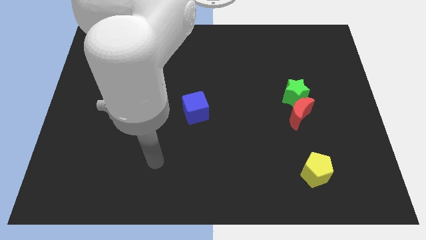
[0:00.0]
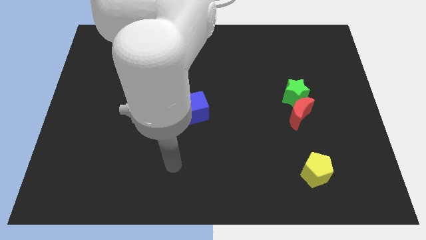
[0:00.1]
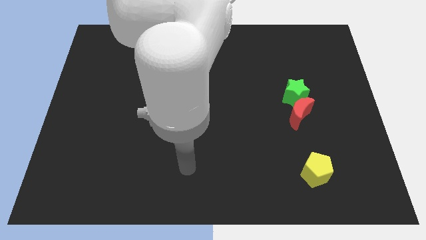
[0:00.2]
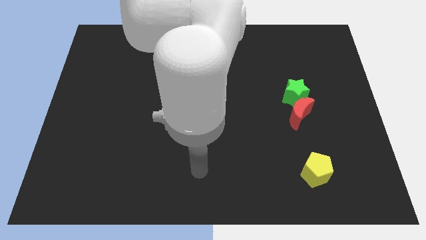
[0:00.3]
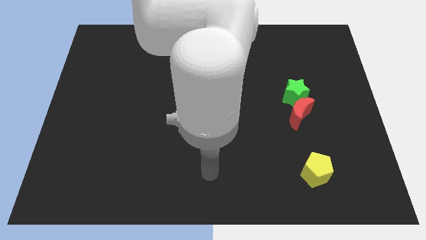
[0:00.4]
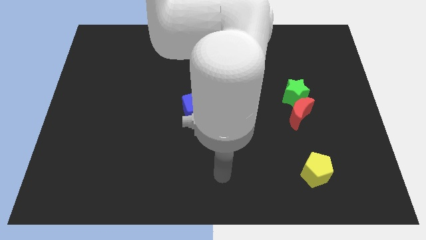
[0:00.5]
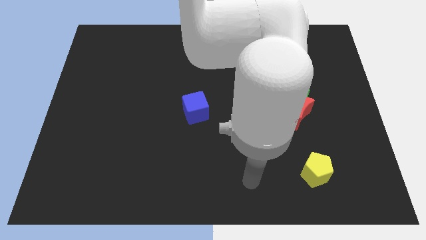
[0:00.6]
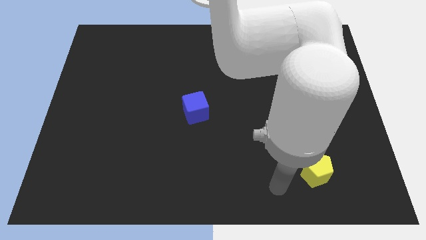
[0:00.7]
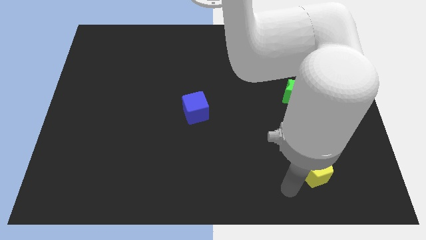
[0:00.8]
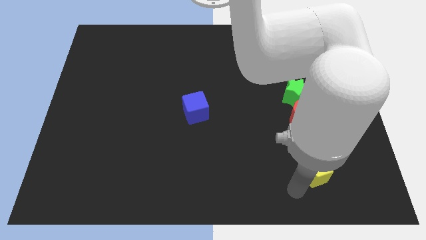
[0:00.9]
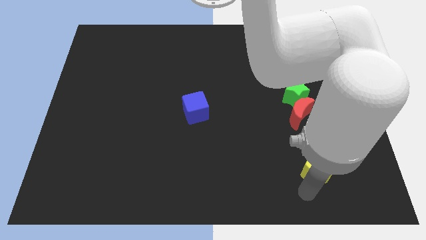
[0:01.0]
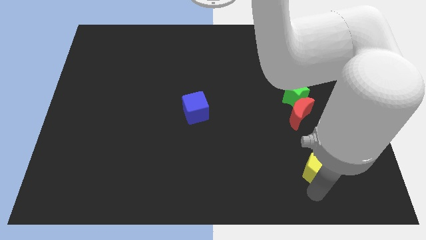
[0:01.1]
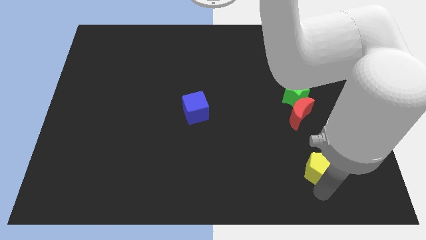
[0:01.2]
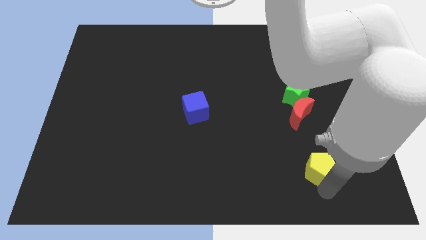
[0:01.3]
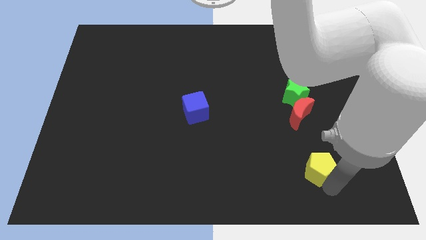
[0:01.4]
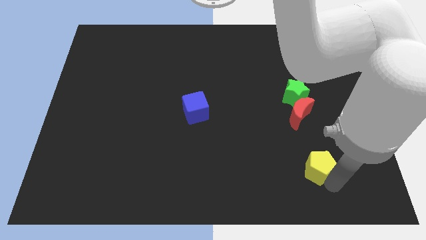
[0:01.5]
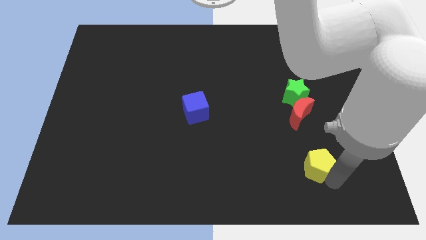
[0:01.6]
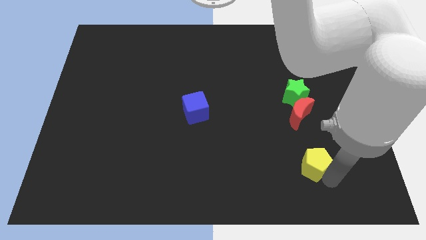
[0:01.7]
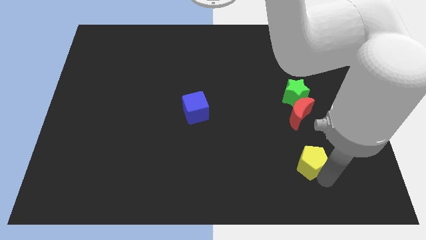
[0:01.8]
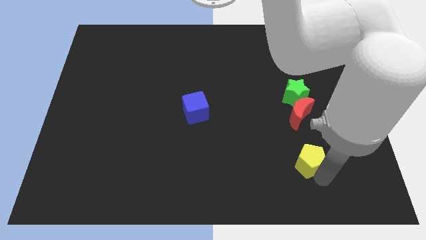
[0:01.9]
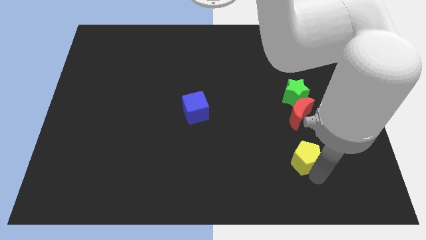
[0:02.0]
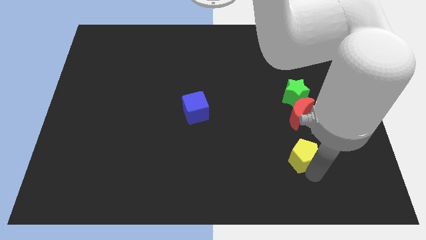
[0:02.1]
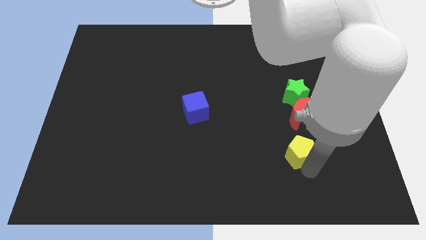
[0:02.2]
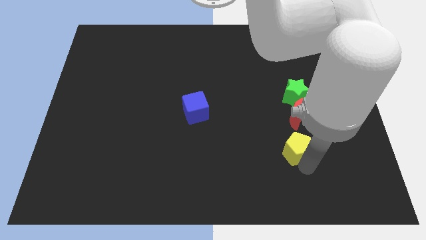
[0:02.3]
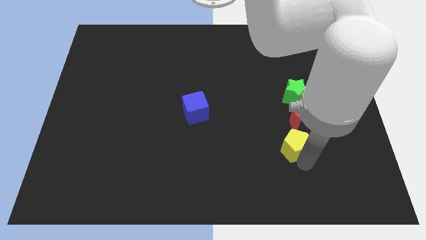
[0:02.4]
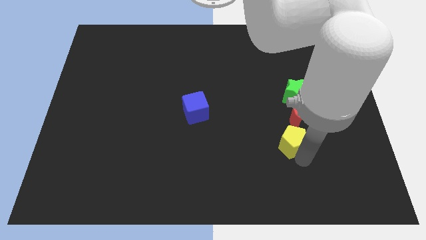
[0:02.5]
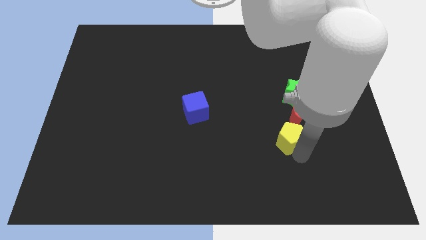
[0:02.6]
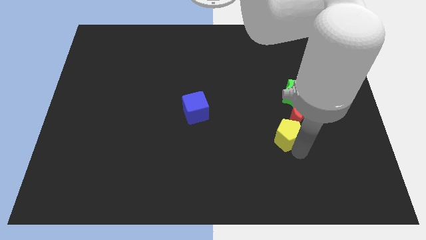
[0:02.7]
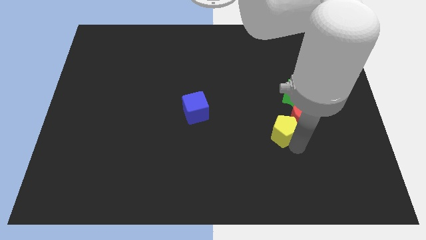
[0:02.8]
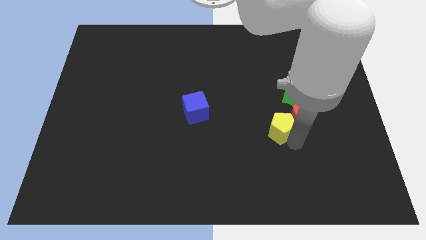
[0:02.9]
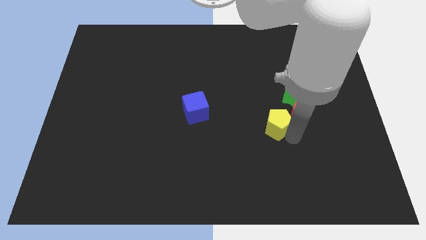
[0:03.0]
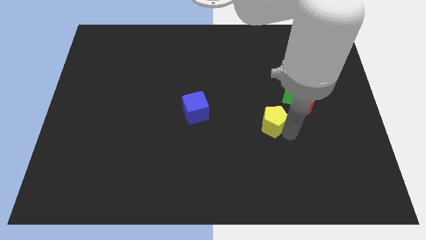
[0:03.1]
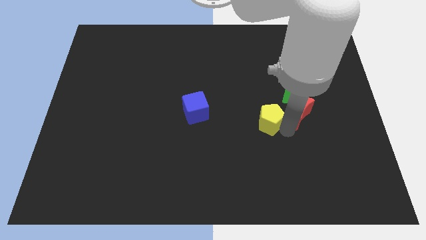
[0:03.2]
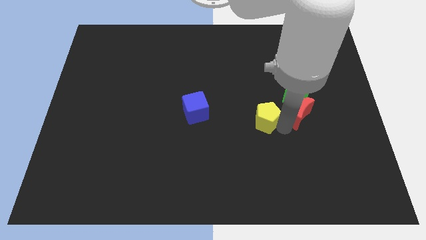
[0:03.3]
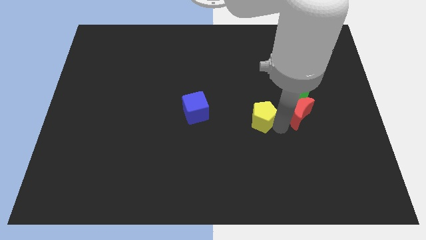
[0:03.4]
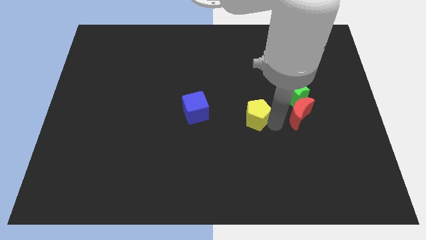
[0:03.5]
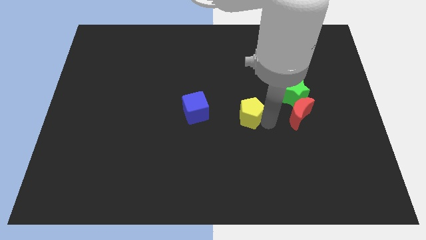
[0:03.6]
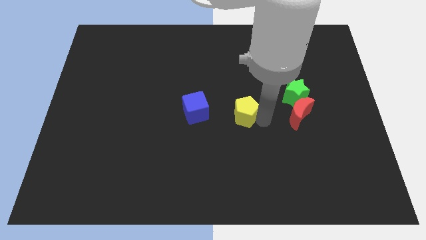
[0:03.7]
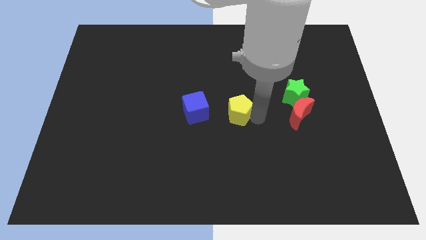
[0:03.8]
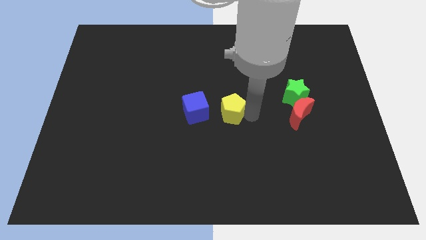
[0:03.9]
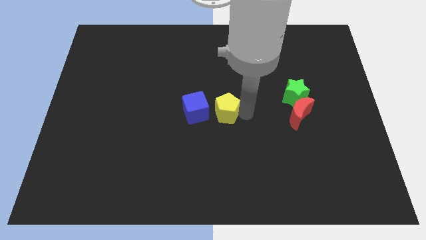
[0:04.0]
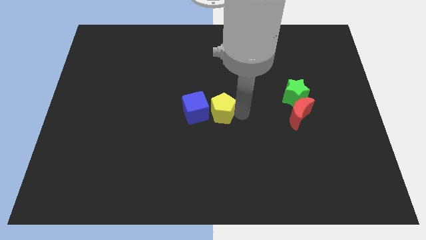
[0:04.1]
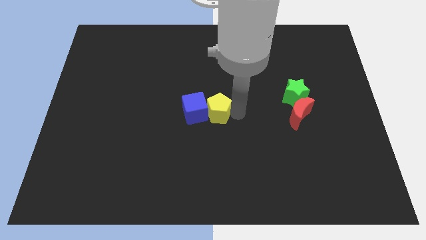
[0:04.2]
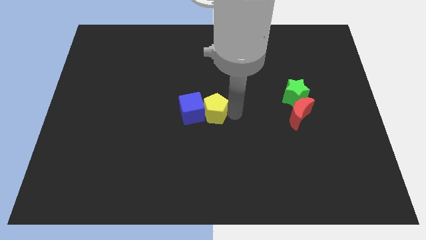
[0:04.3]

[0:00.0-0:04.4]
move the yellow block towards the blue block

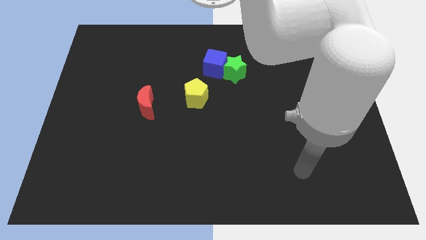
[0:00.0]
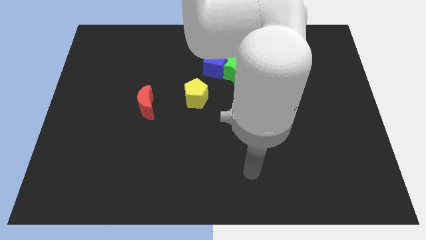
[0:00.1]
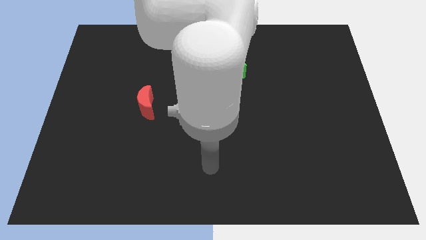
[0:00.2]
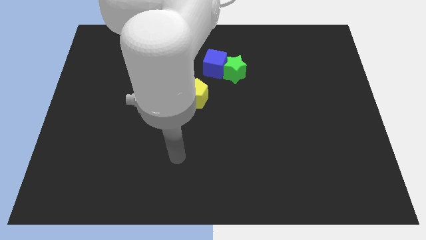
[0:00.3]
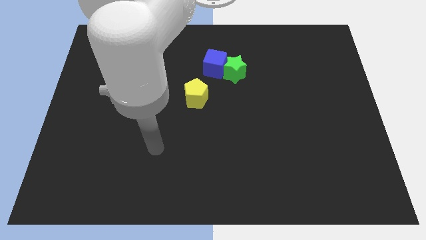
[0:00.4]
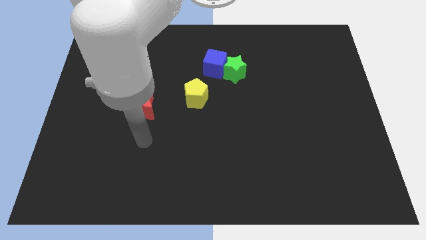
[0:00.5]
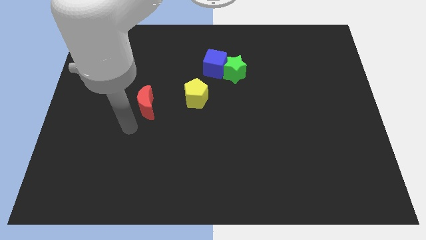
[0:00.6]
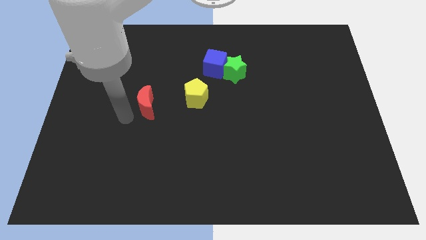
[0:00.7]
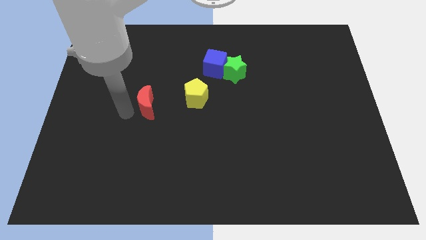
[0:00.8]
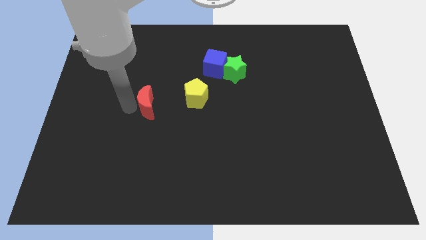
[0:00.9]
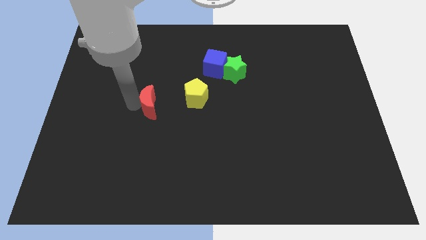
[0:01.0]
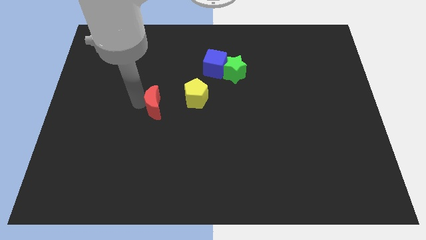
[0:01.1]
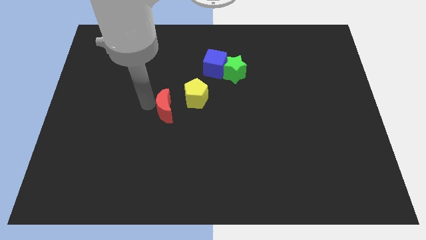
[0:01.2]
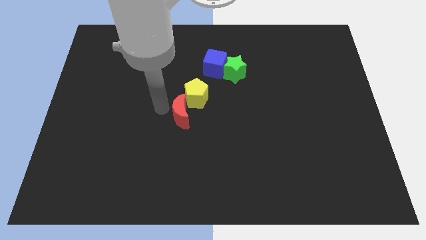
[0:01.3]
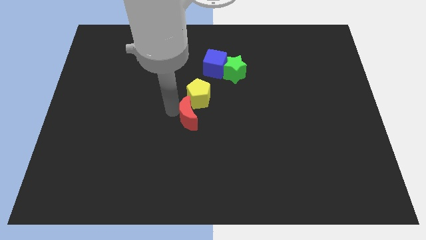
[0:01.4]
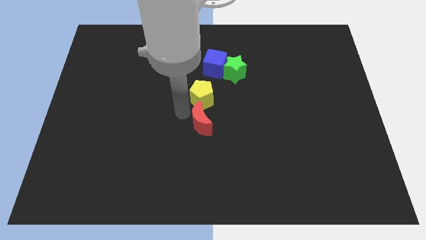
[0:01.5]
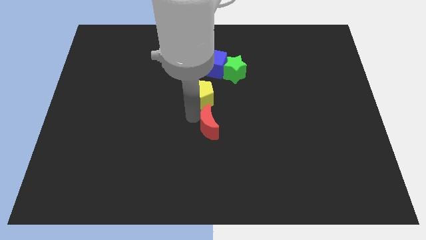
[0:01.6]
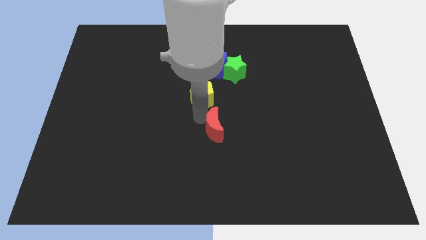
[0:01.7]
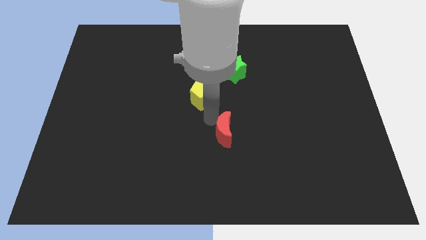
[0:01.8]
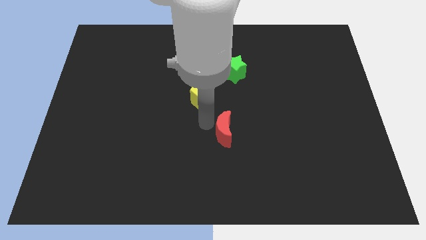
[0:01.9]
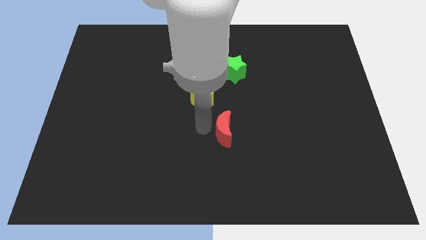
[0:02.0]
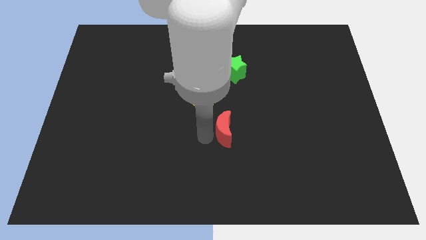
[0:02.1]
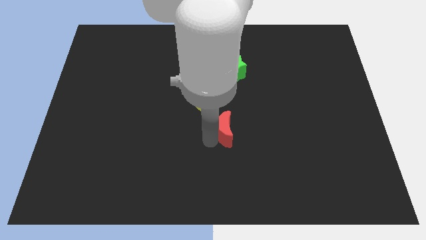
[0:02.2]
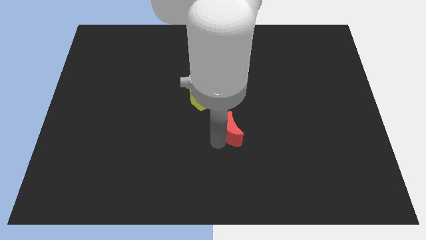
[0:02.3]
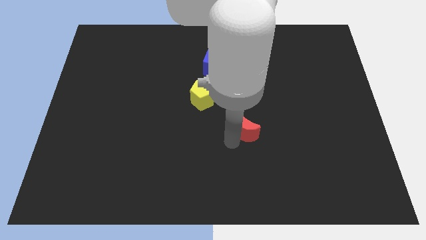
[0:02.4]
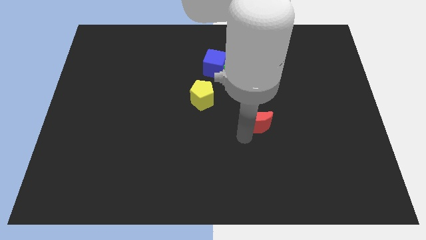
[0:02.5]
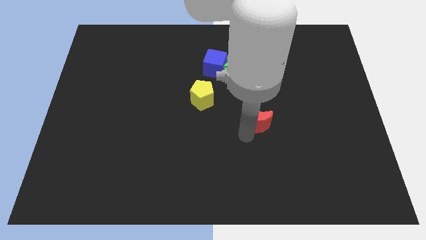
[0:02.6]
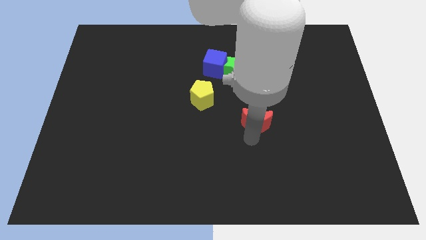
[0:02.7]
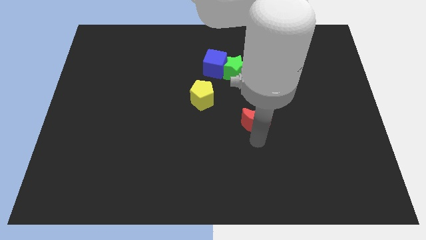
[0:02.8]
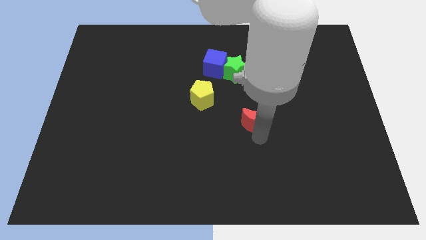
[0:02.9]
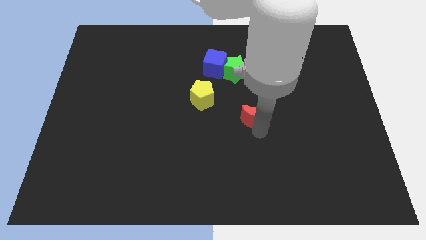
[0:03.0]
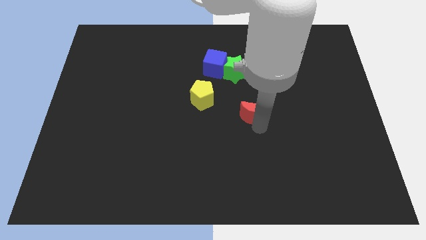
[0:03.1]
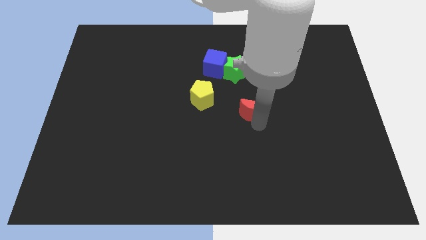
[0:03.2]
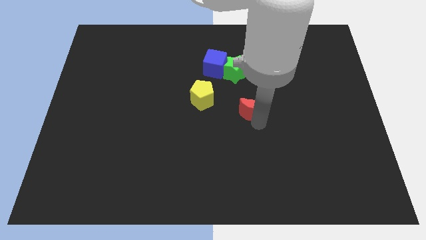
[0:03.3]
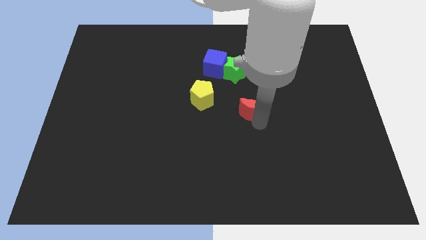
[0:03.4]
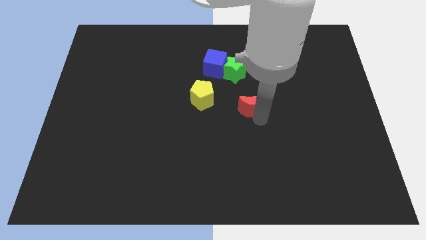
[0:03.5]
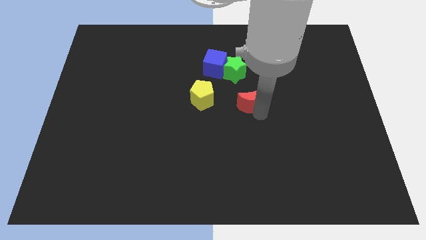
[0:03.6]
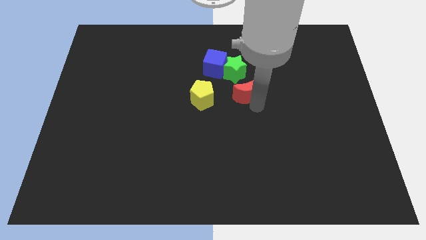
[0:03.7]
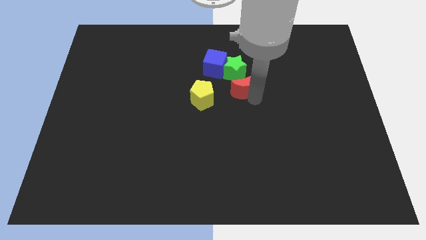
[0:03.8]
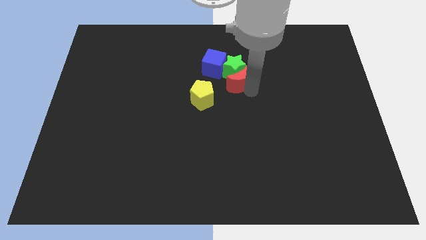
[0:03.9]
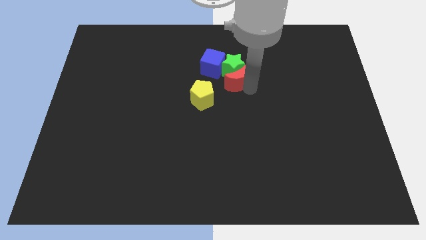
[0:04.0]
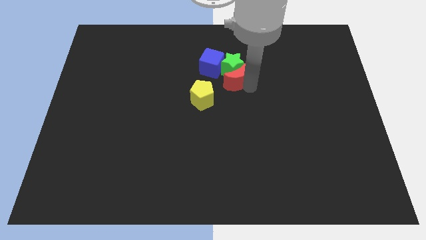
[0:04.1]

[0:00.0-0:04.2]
push the red block to the star
